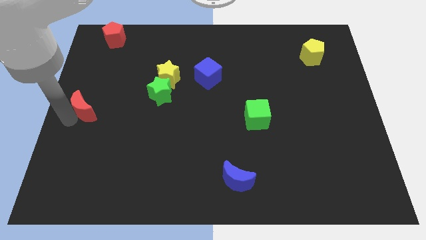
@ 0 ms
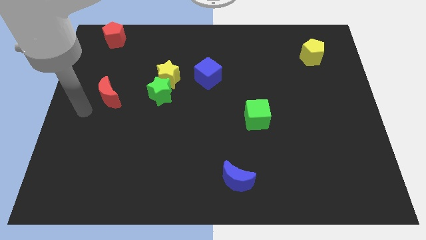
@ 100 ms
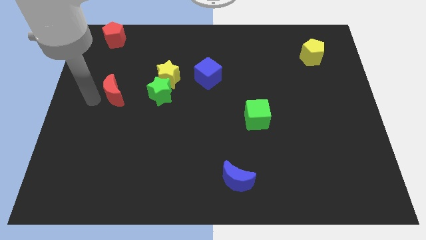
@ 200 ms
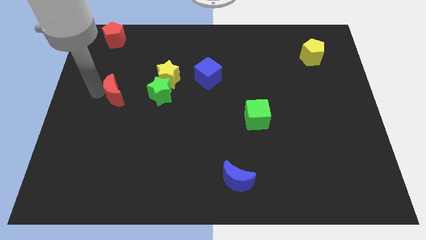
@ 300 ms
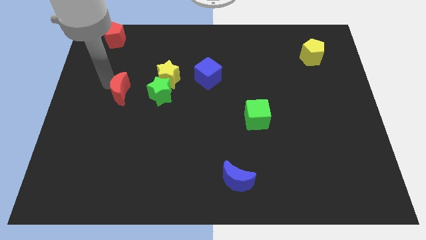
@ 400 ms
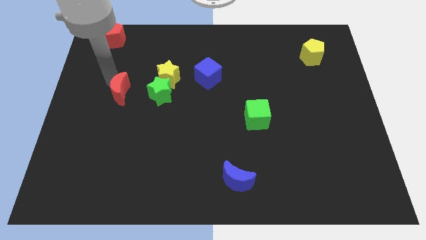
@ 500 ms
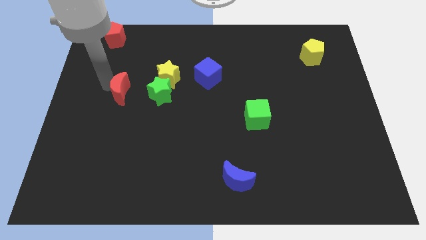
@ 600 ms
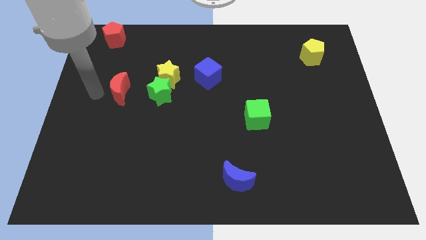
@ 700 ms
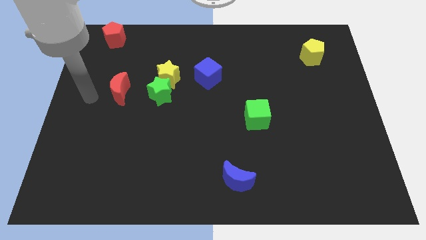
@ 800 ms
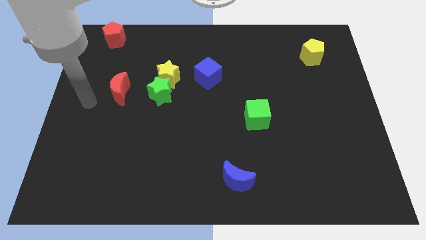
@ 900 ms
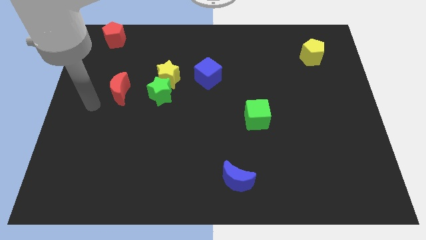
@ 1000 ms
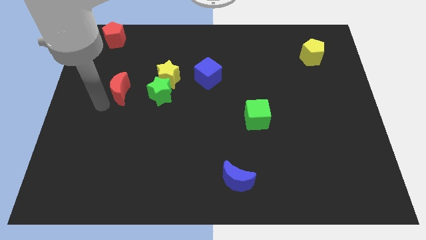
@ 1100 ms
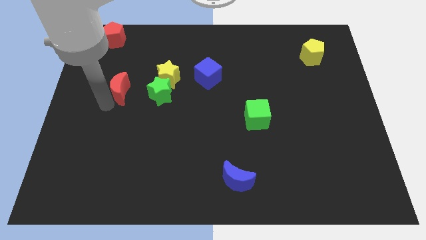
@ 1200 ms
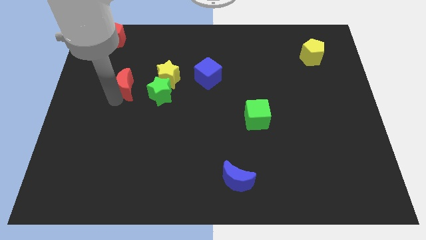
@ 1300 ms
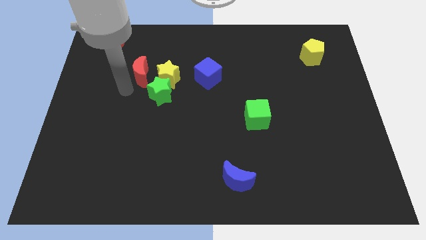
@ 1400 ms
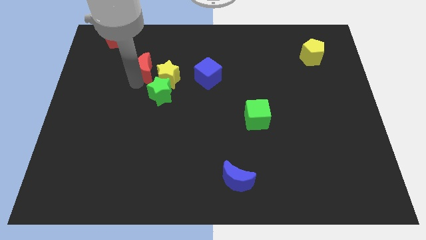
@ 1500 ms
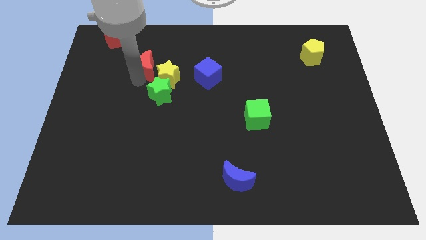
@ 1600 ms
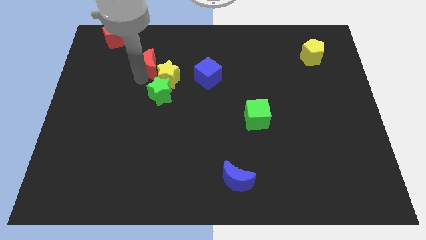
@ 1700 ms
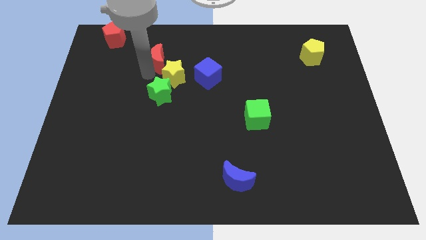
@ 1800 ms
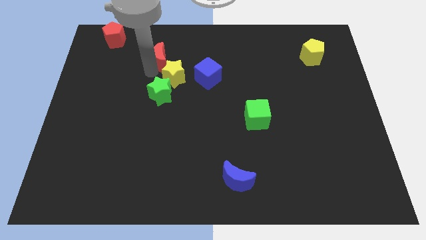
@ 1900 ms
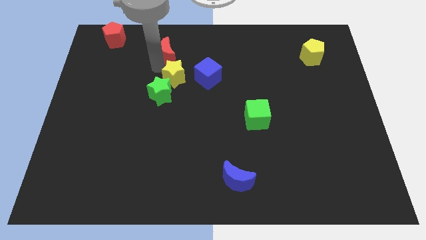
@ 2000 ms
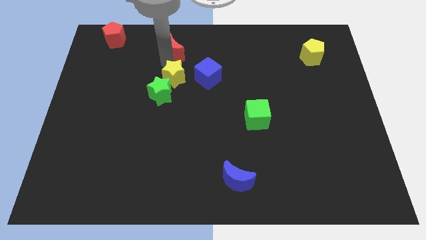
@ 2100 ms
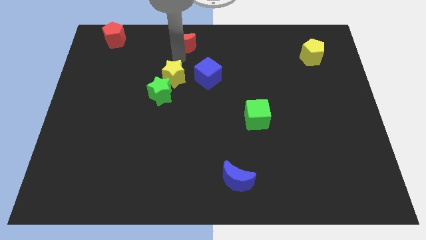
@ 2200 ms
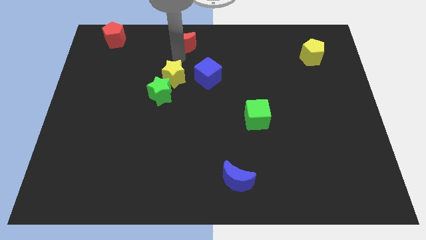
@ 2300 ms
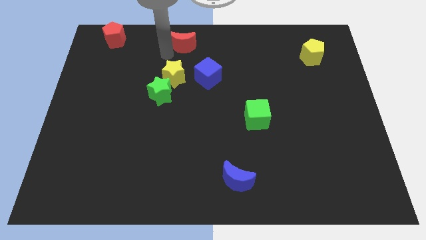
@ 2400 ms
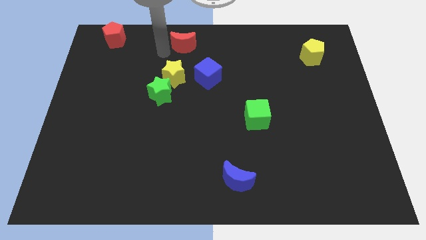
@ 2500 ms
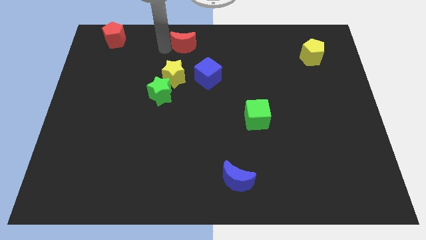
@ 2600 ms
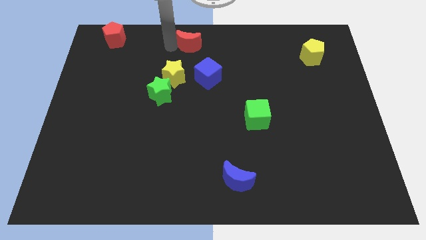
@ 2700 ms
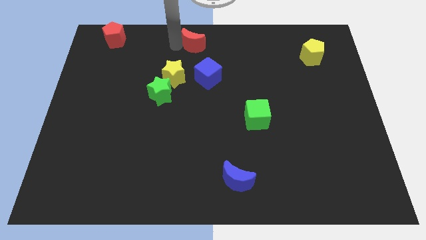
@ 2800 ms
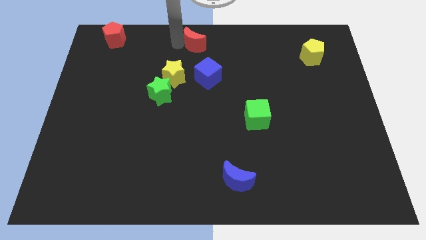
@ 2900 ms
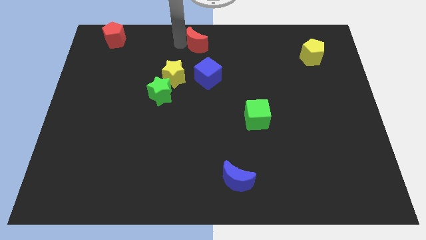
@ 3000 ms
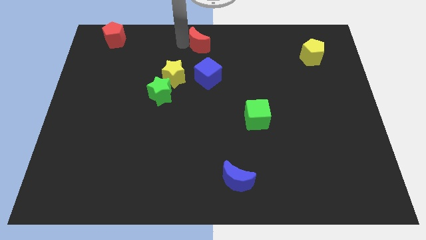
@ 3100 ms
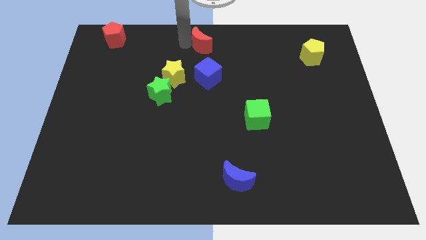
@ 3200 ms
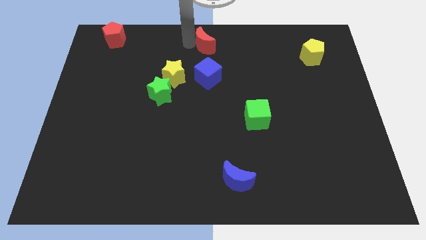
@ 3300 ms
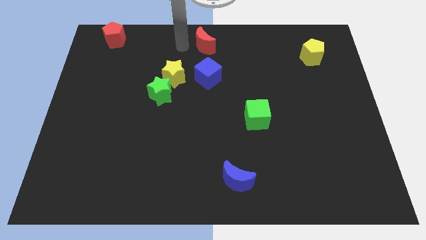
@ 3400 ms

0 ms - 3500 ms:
drag red crescent on top center of the board

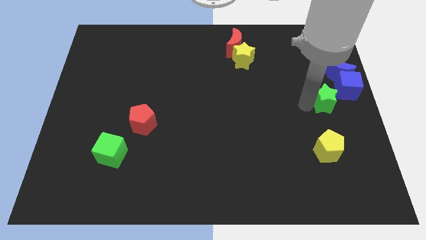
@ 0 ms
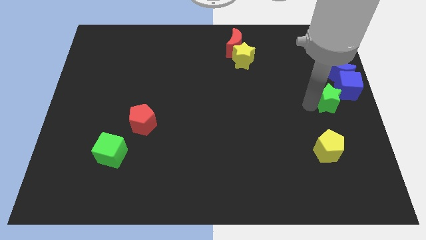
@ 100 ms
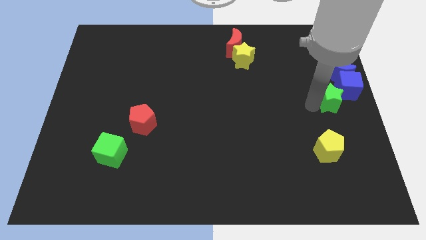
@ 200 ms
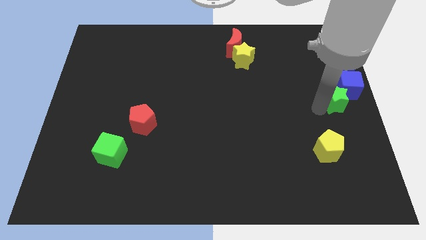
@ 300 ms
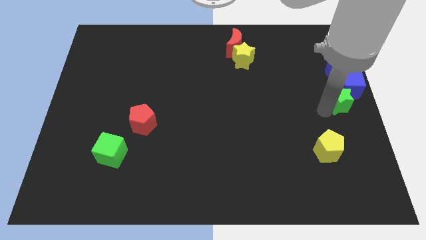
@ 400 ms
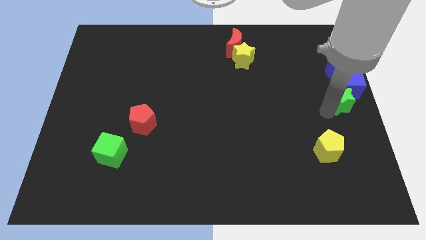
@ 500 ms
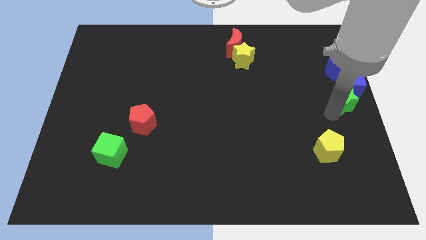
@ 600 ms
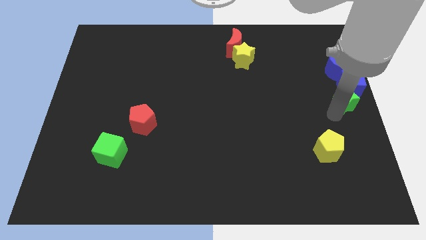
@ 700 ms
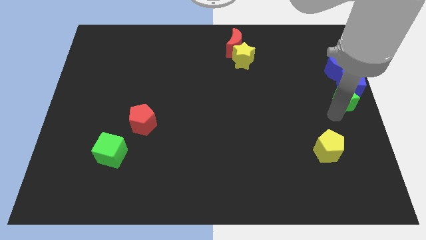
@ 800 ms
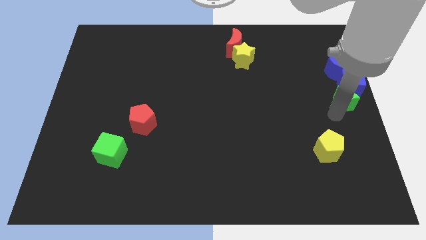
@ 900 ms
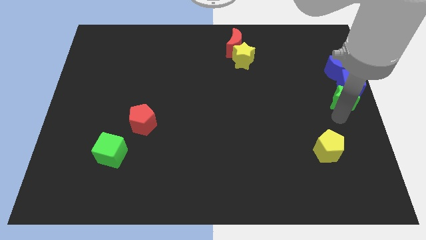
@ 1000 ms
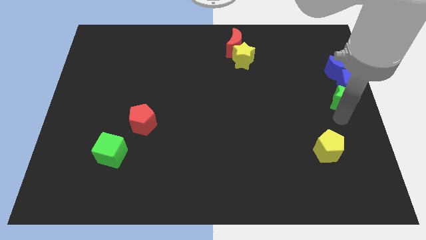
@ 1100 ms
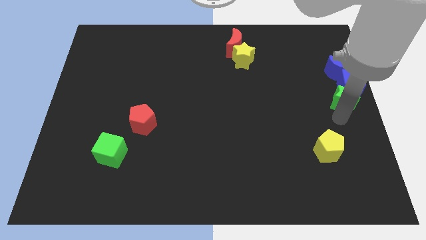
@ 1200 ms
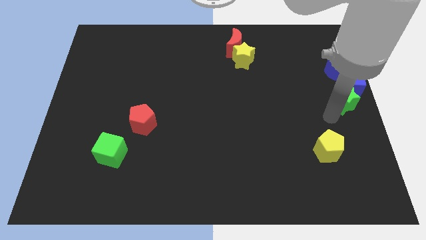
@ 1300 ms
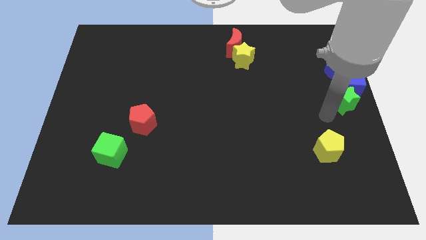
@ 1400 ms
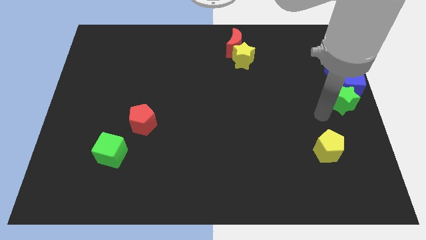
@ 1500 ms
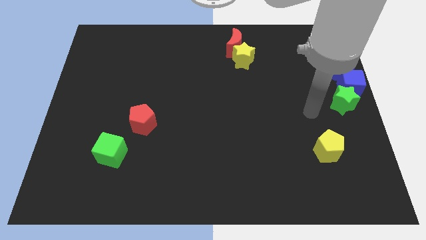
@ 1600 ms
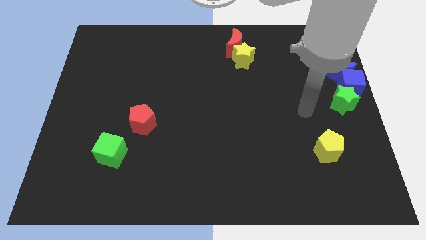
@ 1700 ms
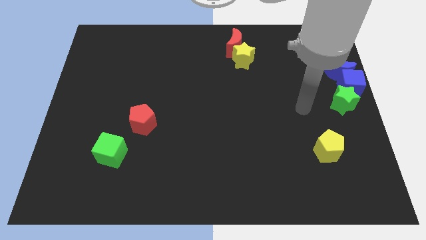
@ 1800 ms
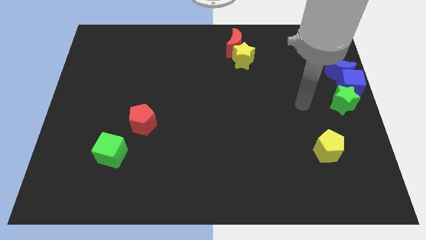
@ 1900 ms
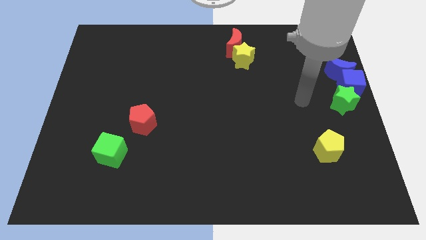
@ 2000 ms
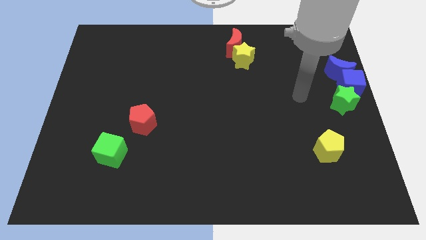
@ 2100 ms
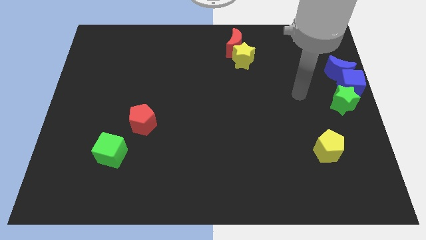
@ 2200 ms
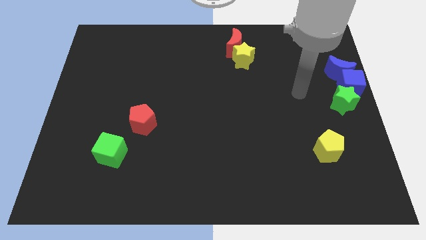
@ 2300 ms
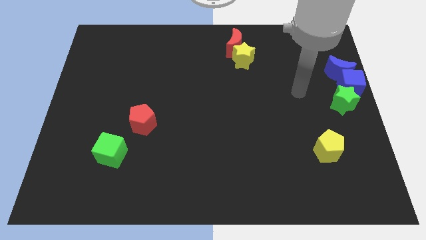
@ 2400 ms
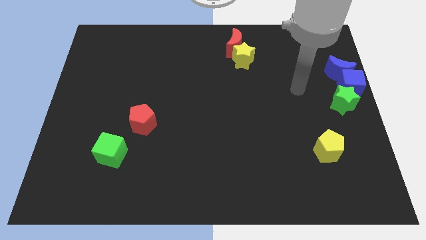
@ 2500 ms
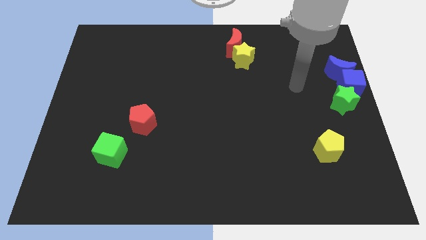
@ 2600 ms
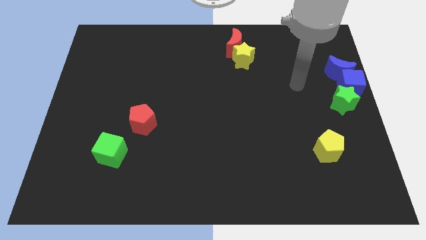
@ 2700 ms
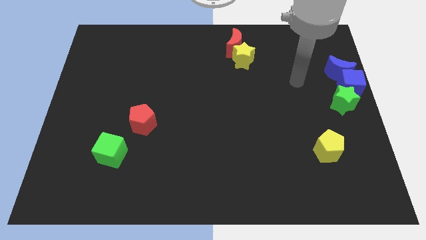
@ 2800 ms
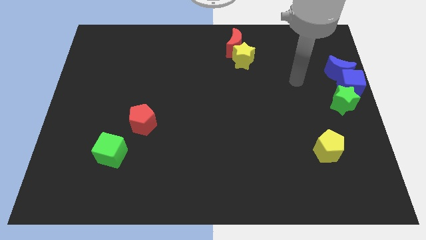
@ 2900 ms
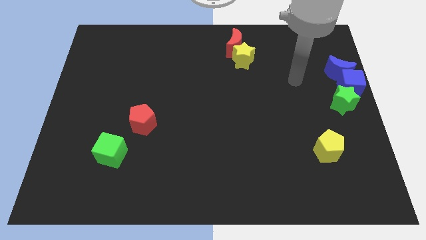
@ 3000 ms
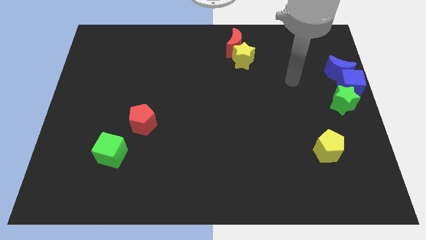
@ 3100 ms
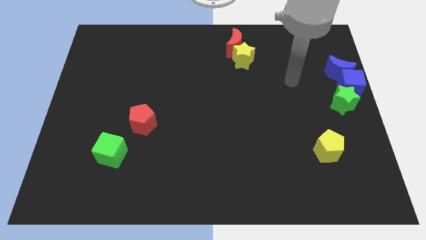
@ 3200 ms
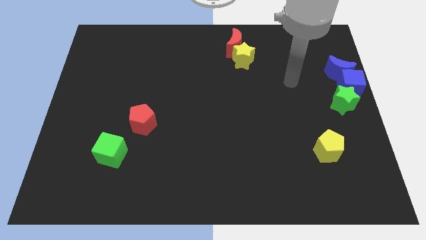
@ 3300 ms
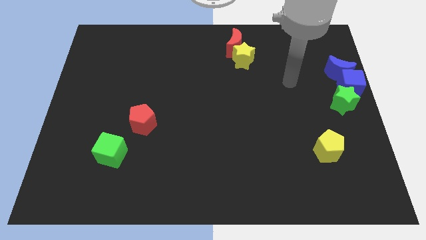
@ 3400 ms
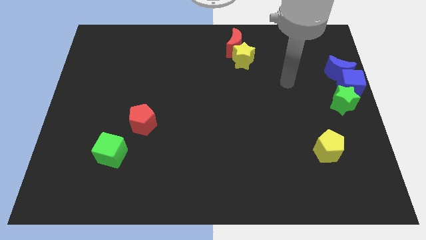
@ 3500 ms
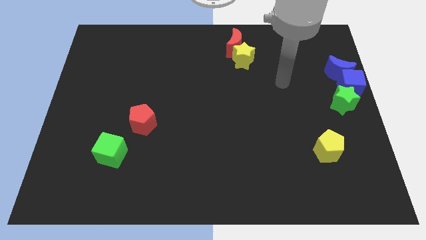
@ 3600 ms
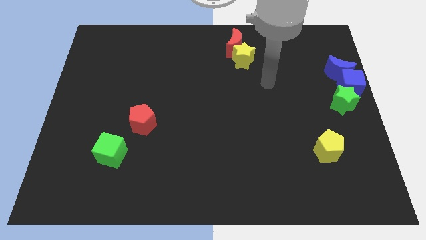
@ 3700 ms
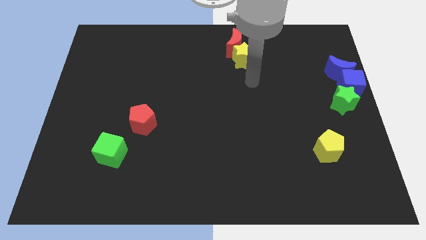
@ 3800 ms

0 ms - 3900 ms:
push the green star into the blue cube

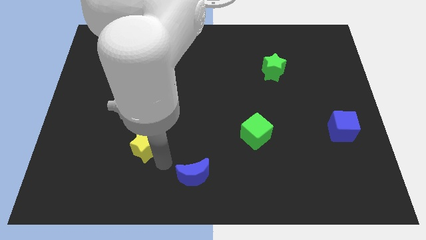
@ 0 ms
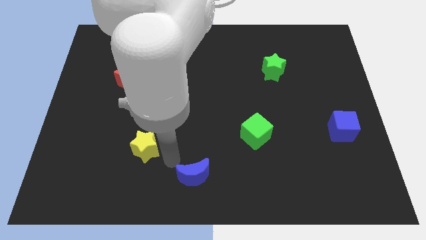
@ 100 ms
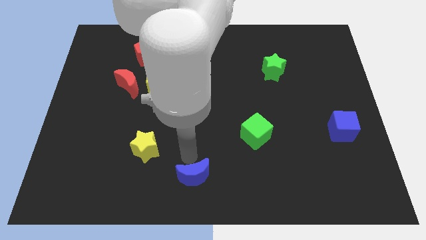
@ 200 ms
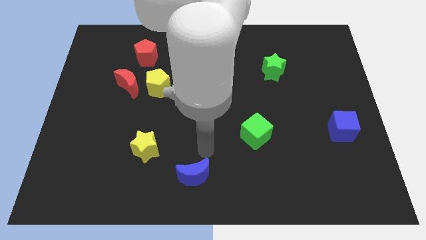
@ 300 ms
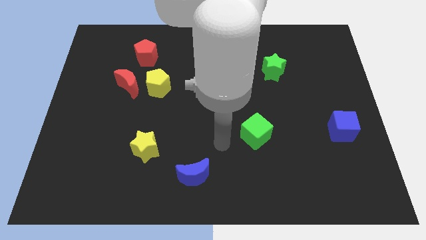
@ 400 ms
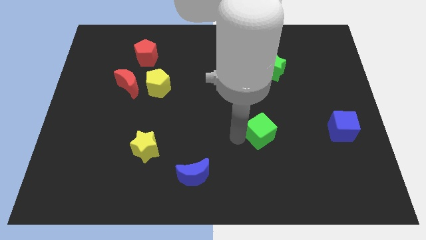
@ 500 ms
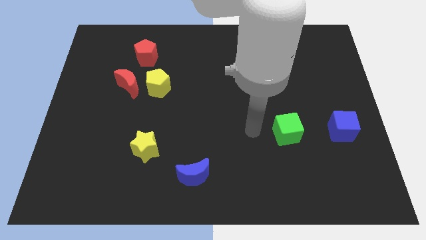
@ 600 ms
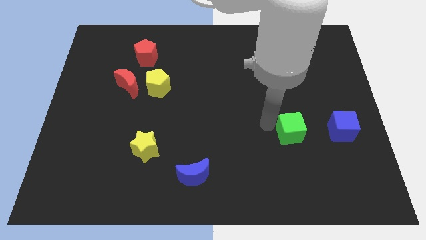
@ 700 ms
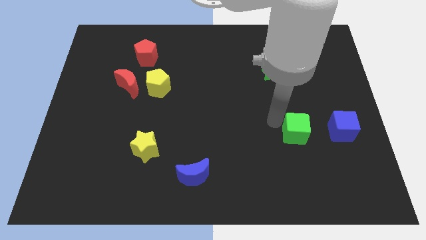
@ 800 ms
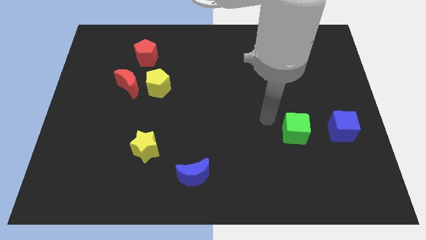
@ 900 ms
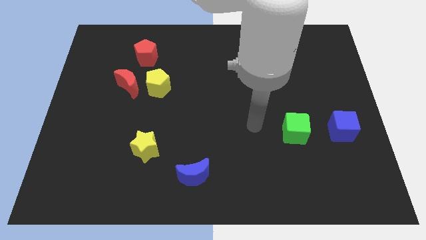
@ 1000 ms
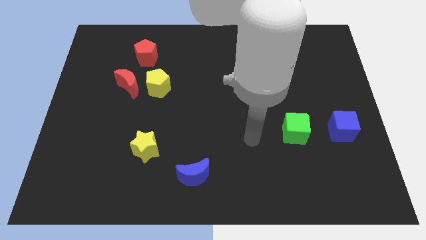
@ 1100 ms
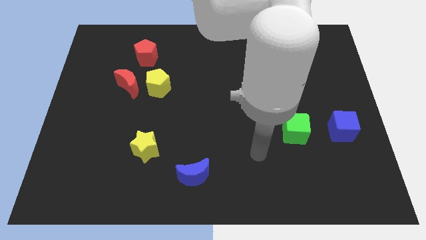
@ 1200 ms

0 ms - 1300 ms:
push the green cube to the left side of the blue cube

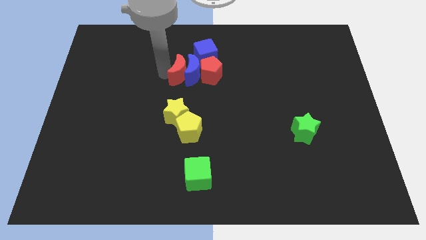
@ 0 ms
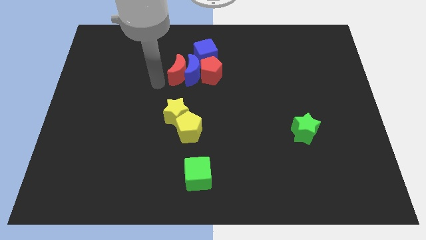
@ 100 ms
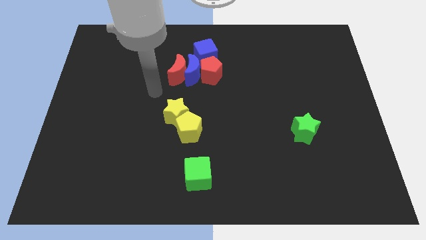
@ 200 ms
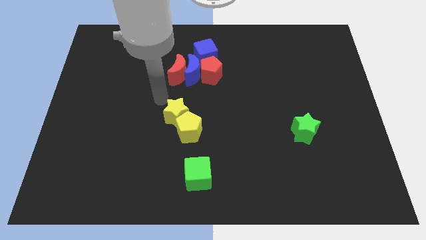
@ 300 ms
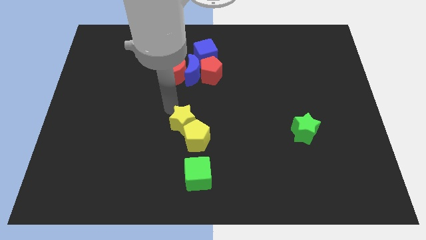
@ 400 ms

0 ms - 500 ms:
move your arm towards the yellow star
